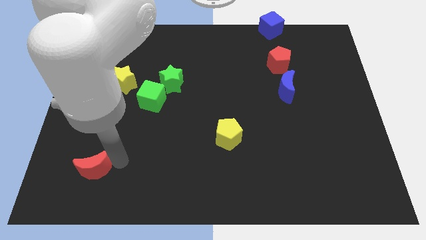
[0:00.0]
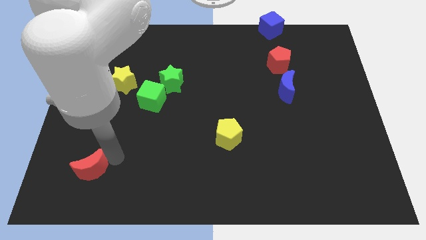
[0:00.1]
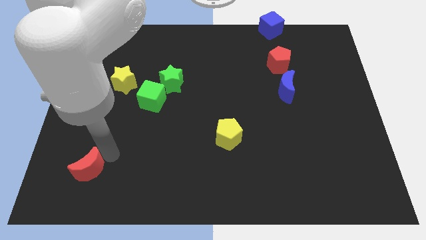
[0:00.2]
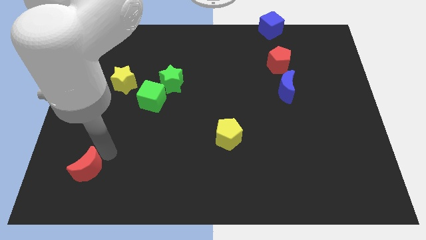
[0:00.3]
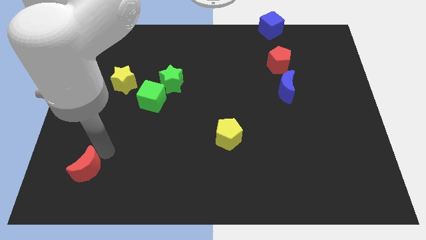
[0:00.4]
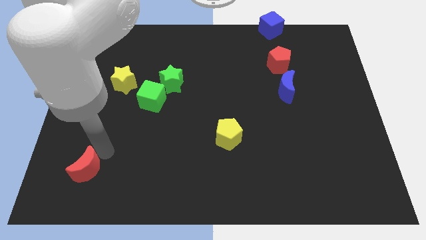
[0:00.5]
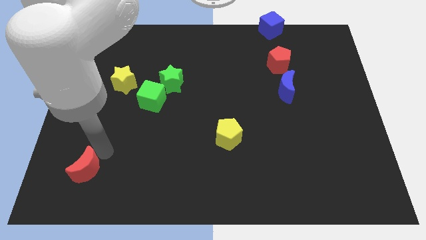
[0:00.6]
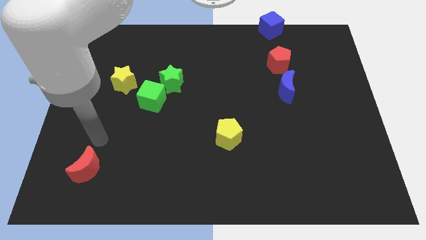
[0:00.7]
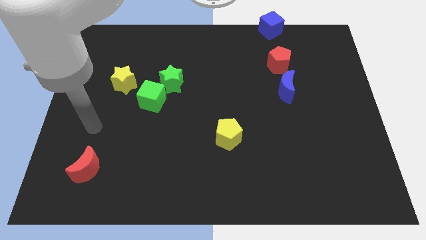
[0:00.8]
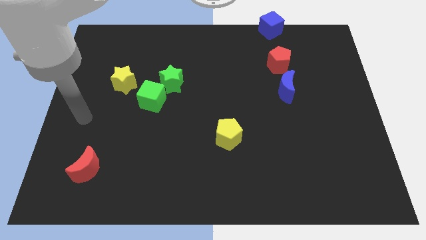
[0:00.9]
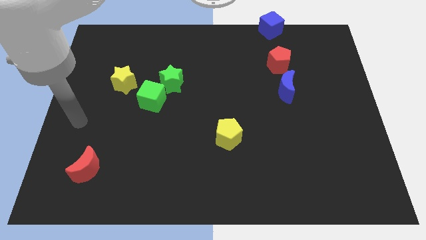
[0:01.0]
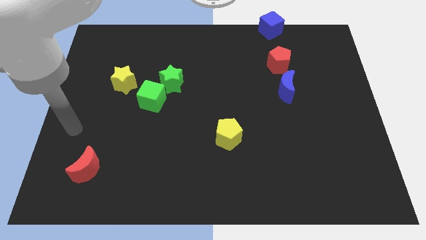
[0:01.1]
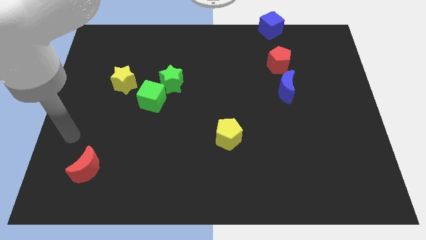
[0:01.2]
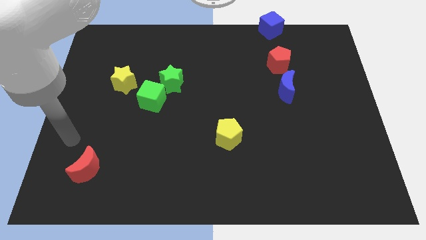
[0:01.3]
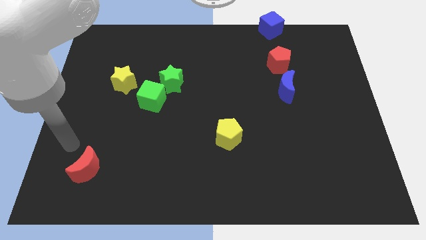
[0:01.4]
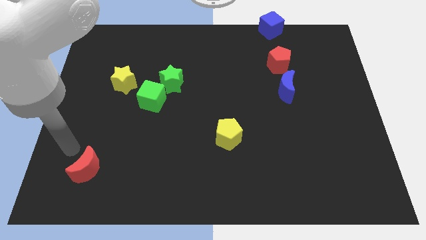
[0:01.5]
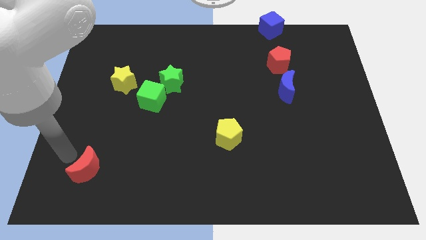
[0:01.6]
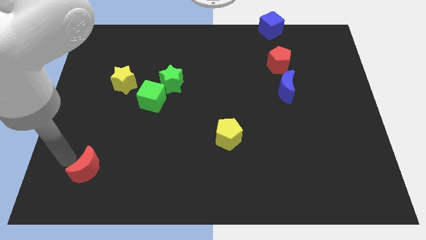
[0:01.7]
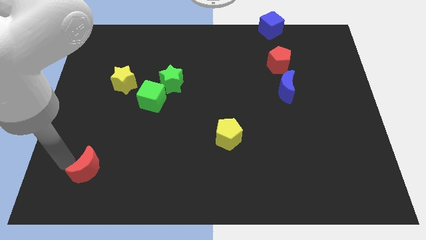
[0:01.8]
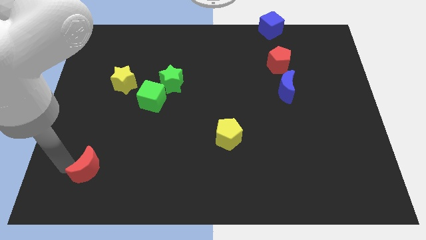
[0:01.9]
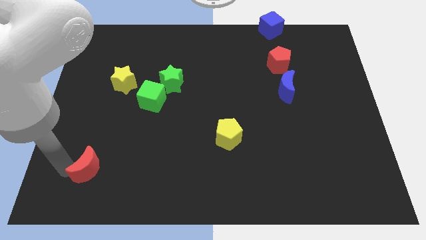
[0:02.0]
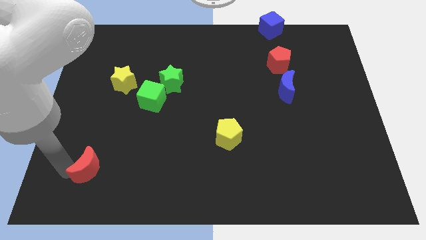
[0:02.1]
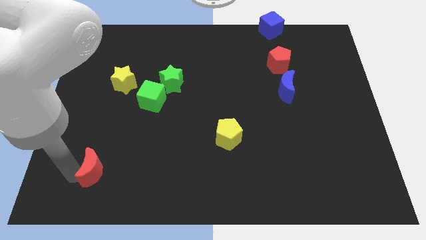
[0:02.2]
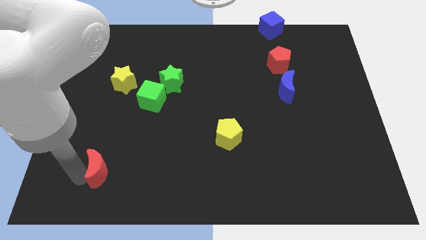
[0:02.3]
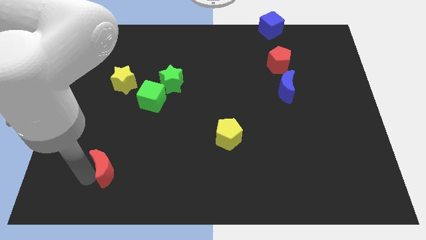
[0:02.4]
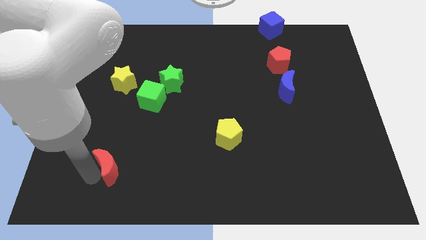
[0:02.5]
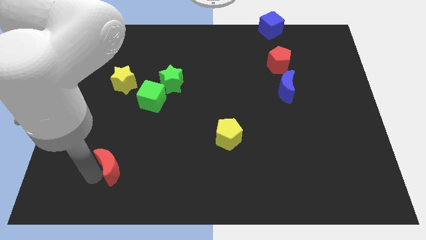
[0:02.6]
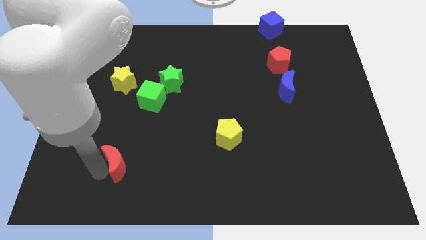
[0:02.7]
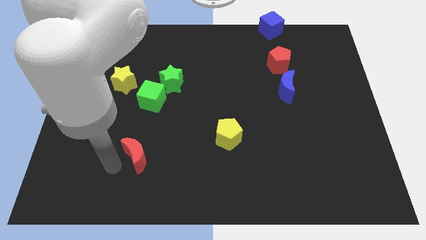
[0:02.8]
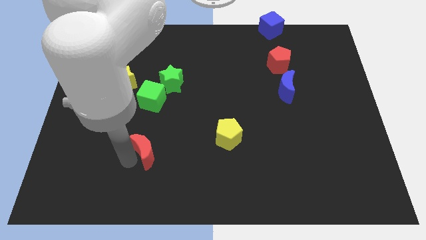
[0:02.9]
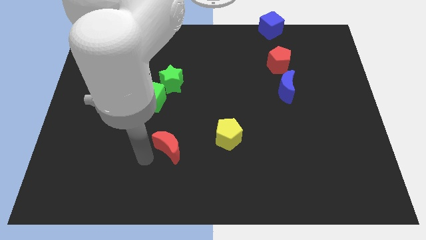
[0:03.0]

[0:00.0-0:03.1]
move red moon towards yellow pentagon

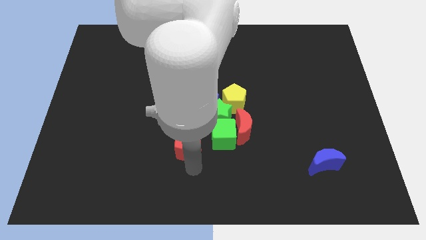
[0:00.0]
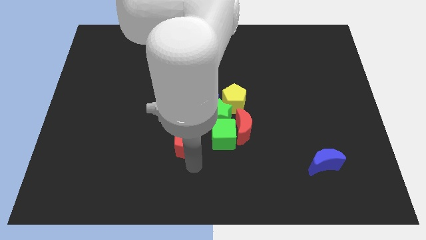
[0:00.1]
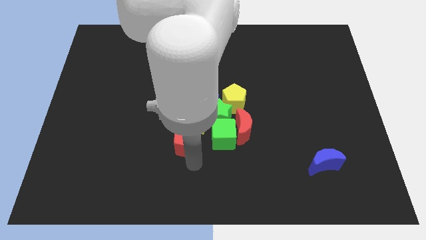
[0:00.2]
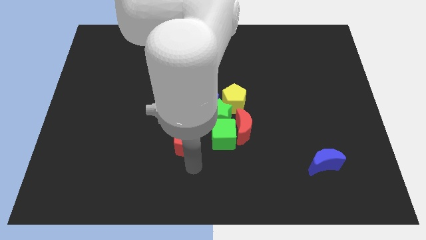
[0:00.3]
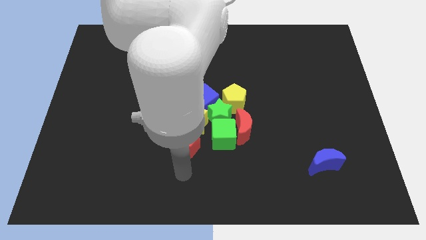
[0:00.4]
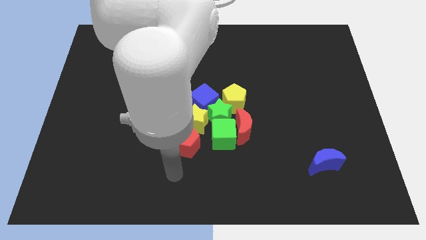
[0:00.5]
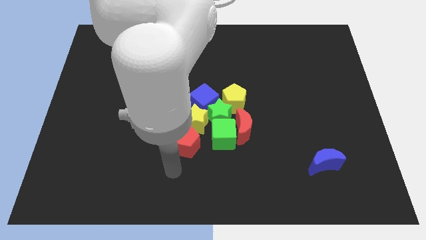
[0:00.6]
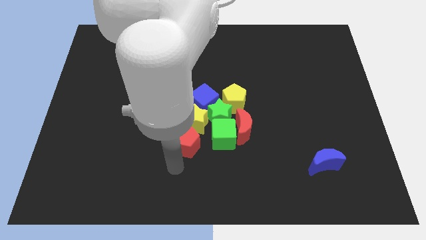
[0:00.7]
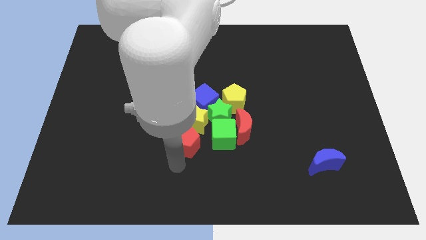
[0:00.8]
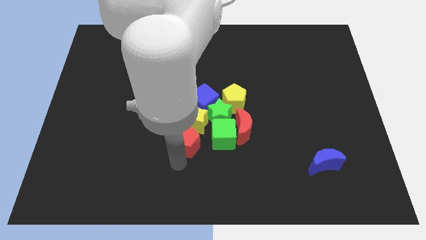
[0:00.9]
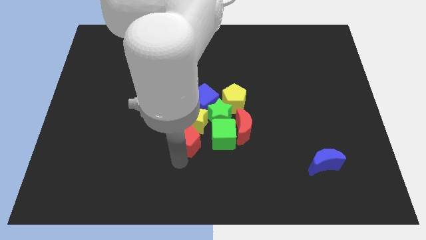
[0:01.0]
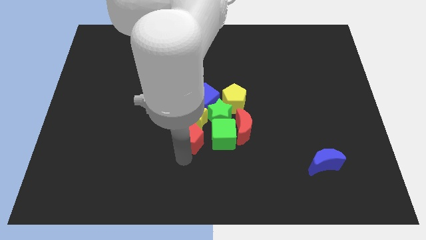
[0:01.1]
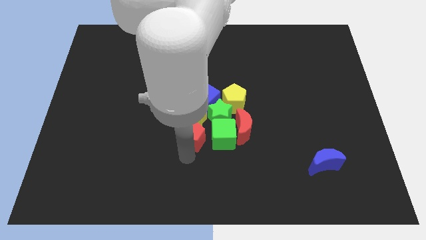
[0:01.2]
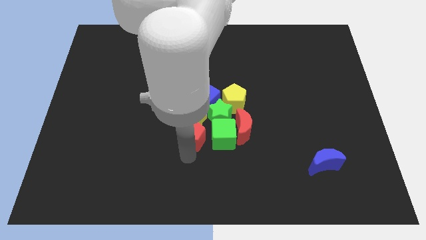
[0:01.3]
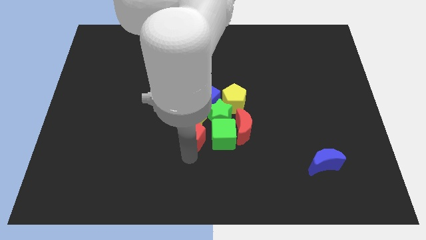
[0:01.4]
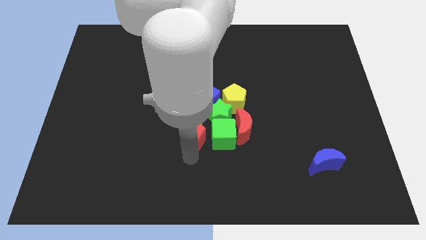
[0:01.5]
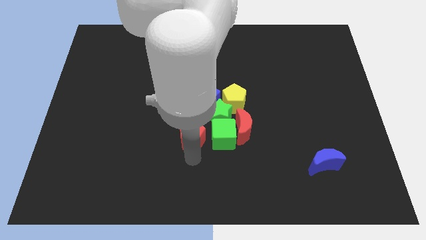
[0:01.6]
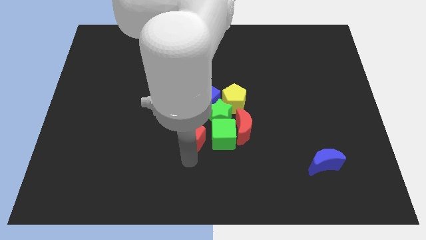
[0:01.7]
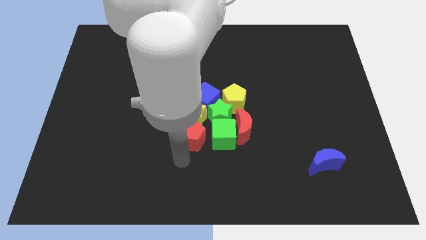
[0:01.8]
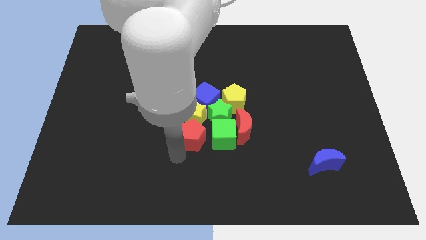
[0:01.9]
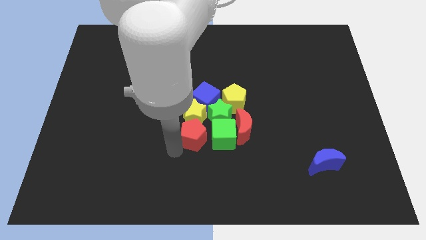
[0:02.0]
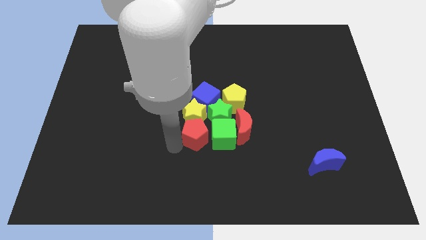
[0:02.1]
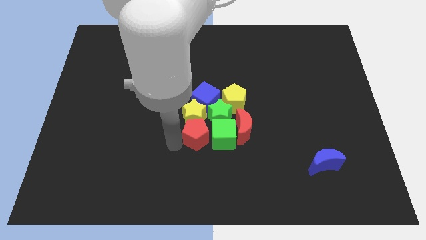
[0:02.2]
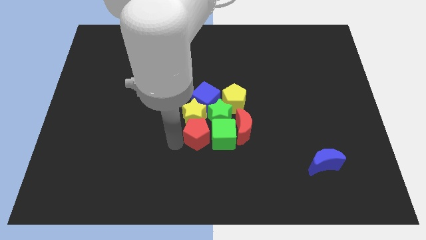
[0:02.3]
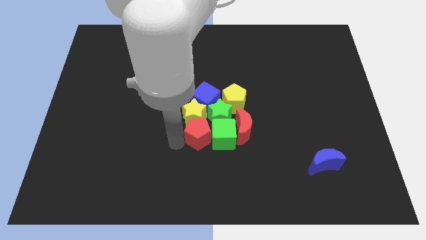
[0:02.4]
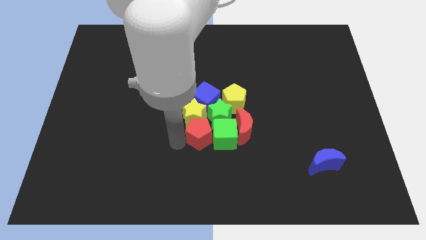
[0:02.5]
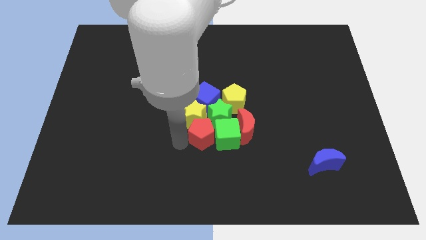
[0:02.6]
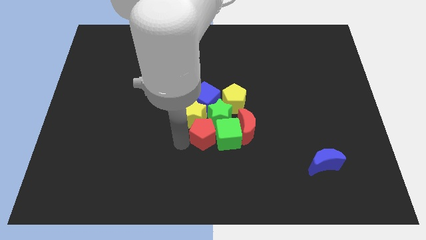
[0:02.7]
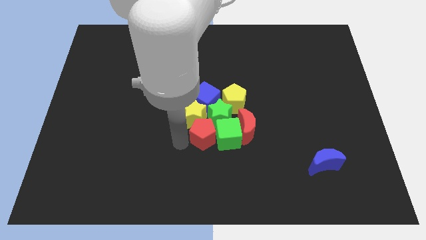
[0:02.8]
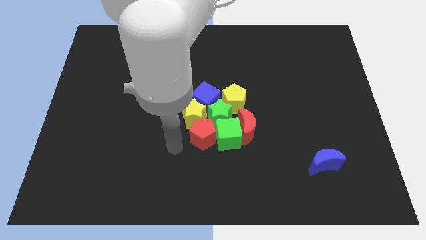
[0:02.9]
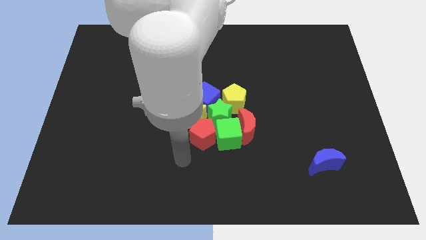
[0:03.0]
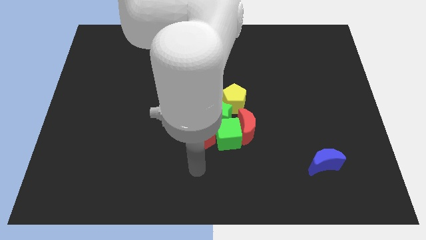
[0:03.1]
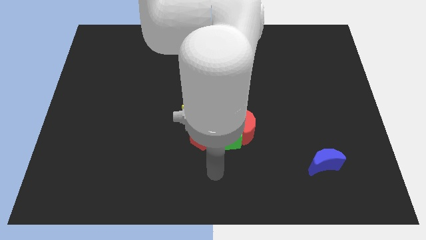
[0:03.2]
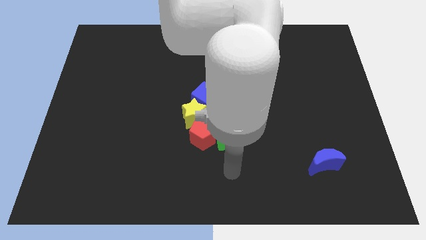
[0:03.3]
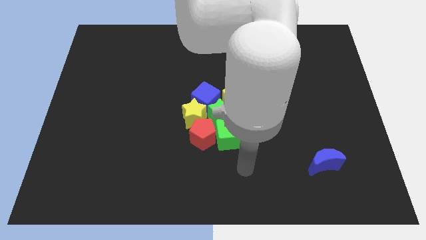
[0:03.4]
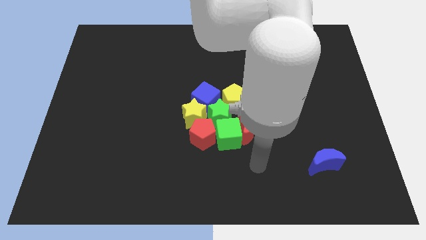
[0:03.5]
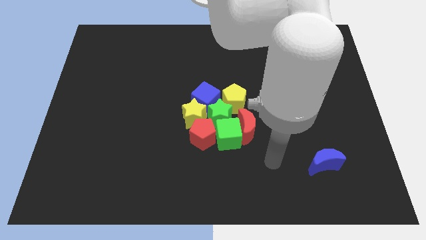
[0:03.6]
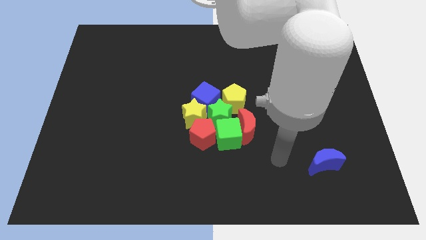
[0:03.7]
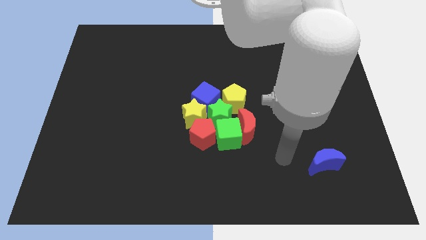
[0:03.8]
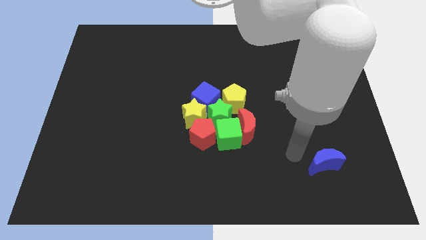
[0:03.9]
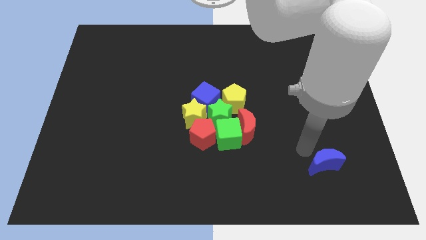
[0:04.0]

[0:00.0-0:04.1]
push the red pentagon into the green cube

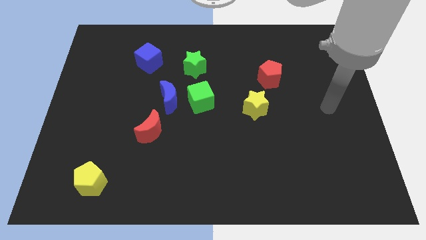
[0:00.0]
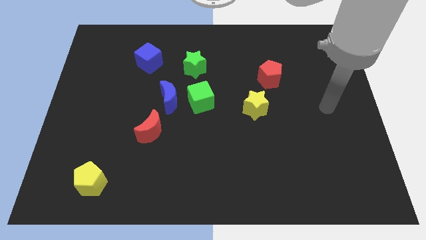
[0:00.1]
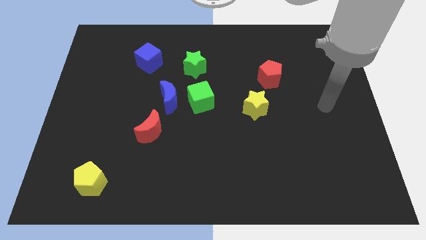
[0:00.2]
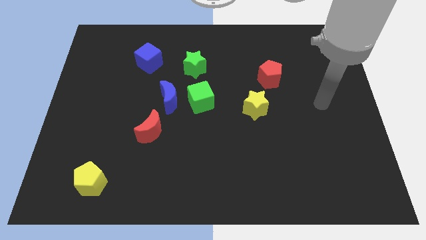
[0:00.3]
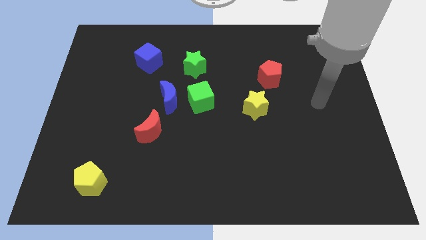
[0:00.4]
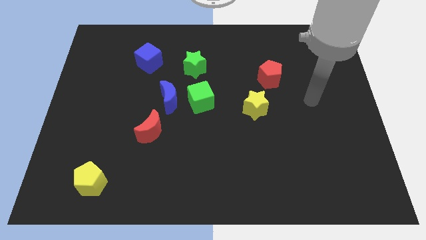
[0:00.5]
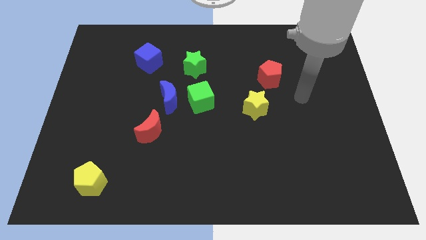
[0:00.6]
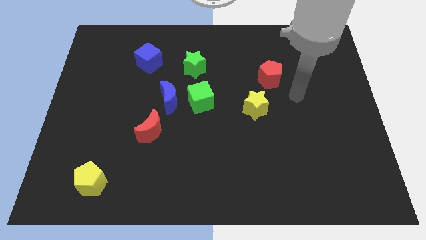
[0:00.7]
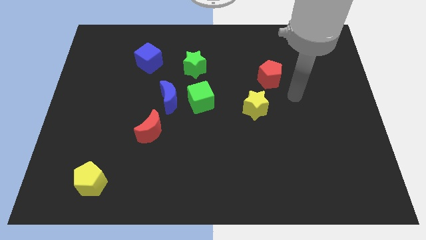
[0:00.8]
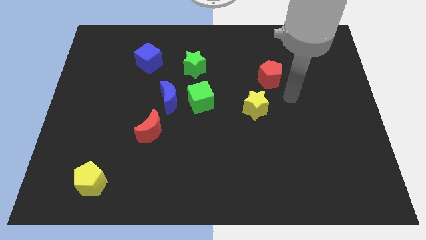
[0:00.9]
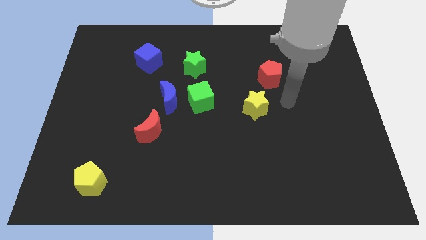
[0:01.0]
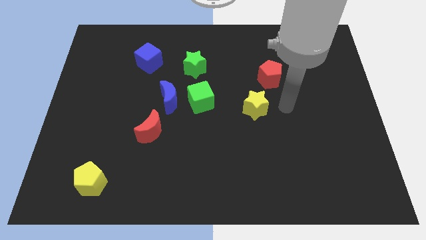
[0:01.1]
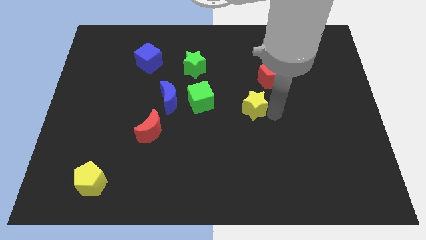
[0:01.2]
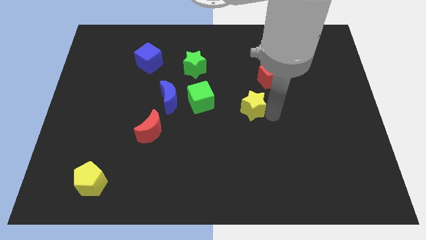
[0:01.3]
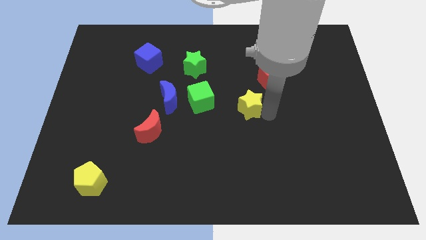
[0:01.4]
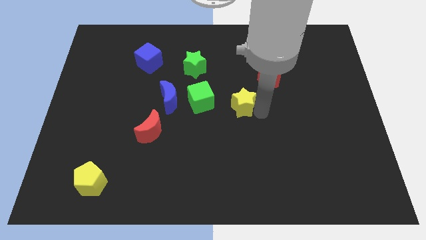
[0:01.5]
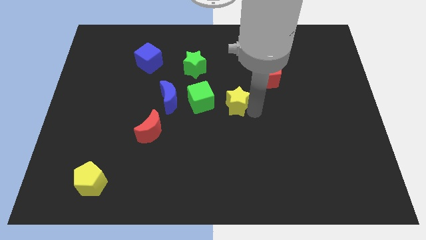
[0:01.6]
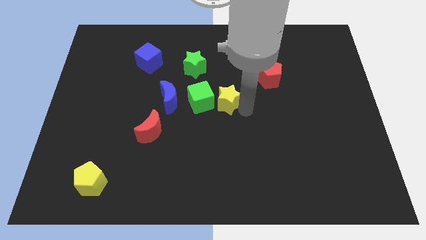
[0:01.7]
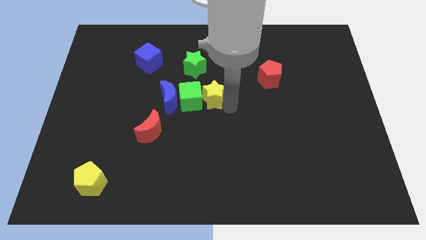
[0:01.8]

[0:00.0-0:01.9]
push the yellow star to the right of the of the green cube
